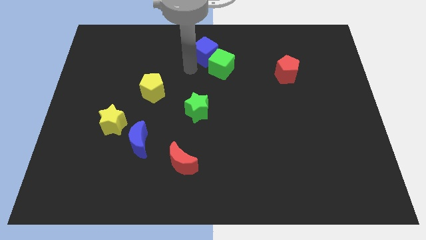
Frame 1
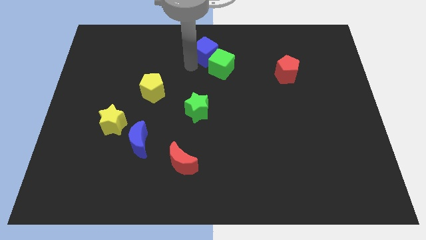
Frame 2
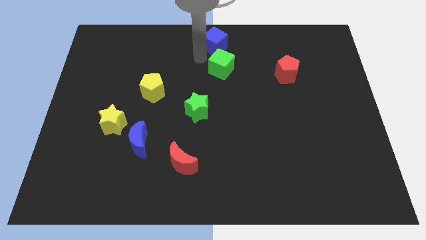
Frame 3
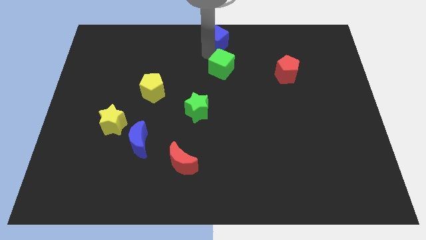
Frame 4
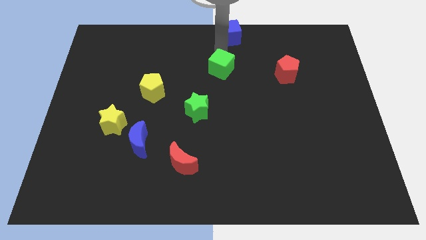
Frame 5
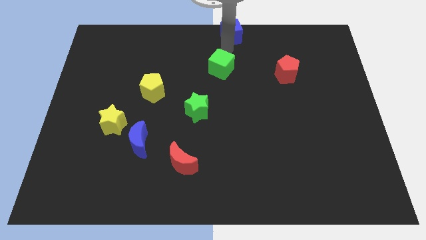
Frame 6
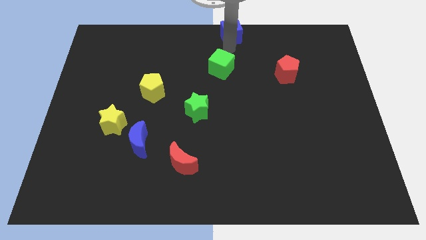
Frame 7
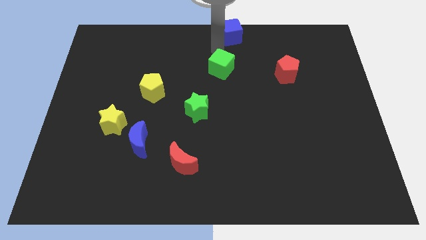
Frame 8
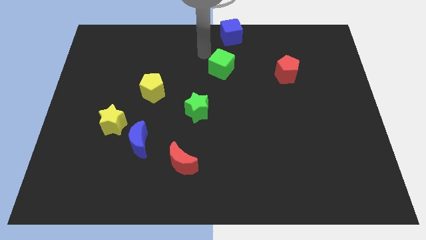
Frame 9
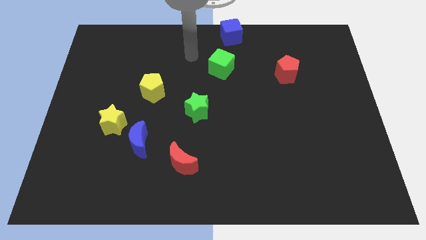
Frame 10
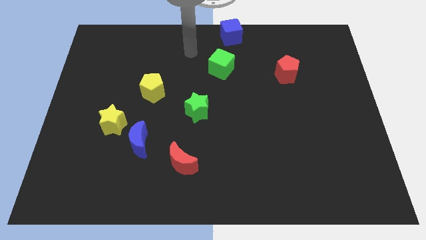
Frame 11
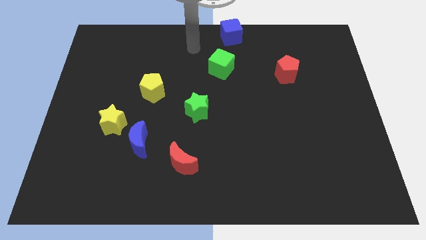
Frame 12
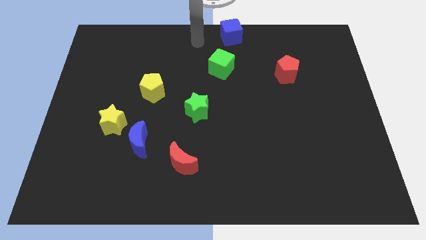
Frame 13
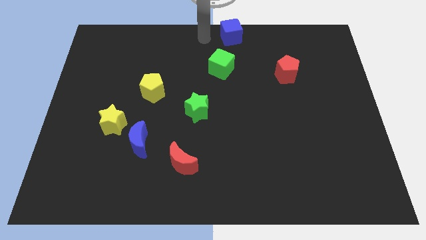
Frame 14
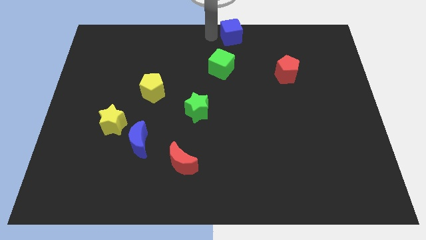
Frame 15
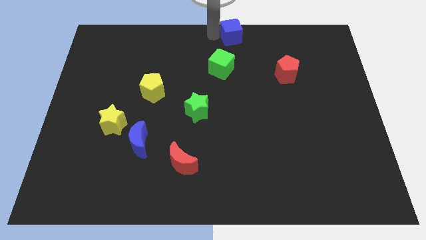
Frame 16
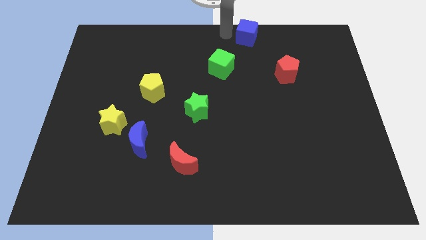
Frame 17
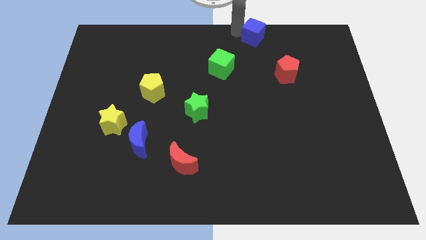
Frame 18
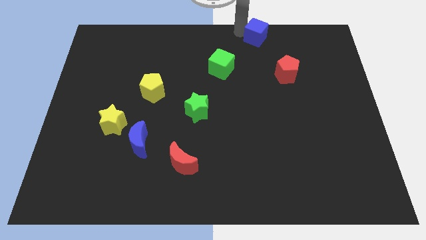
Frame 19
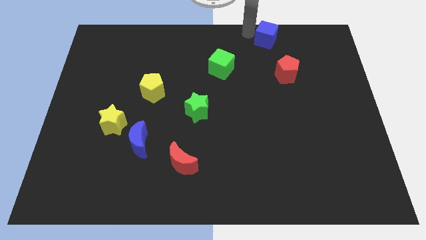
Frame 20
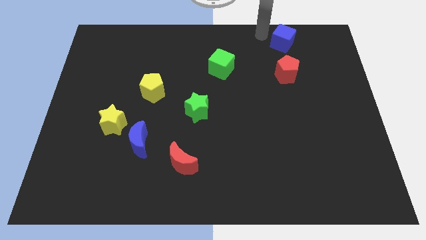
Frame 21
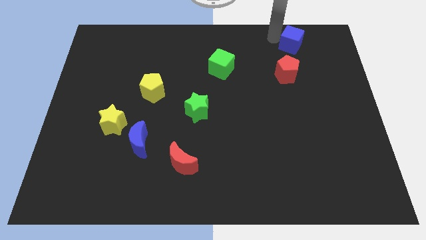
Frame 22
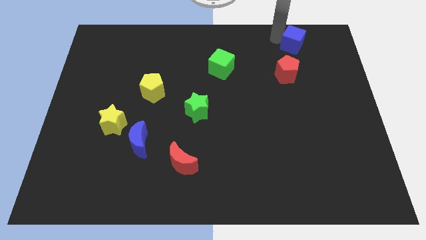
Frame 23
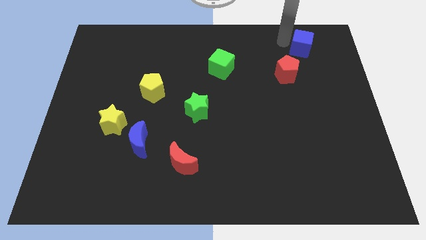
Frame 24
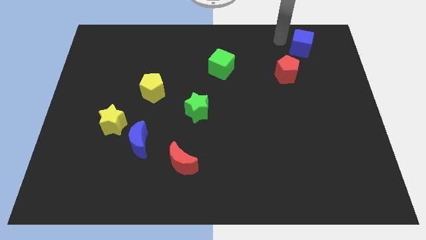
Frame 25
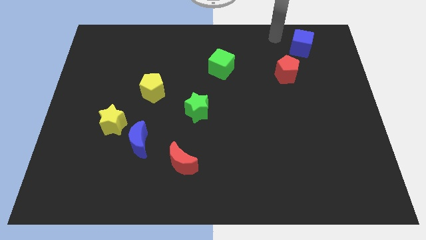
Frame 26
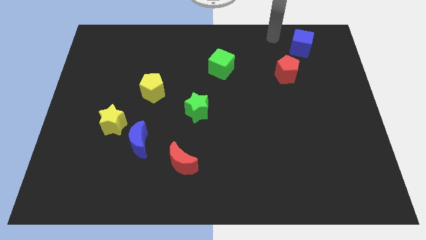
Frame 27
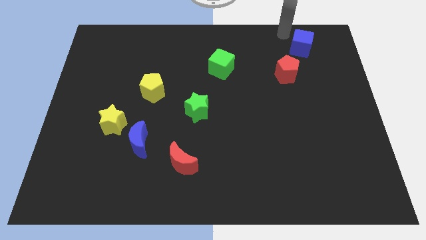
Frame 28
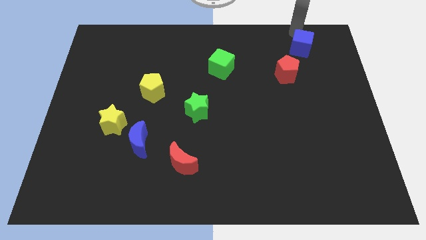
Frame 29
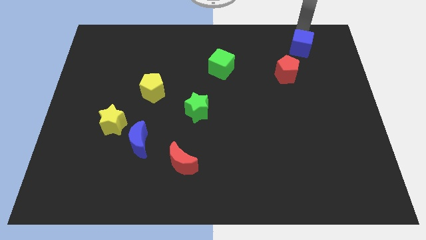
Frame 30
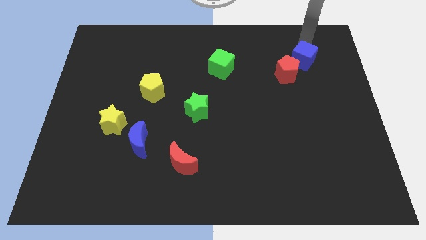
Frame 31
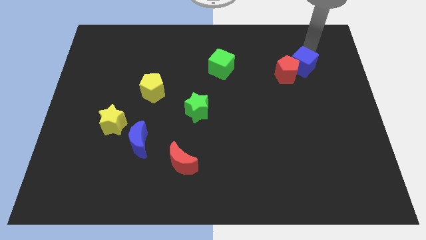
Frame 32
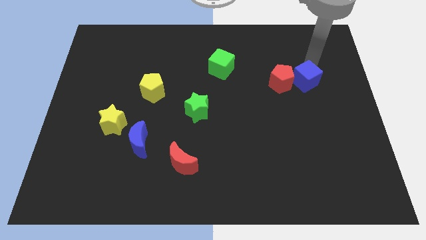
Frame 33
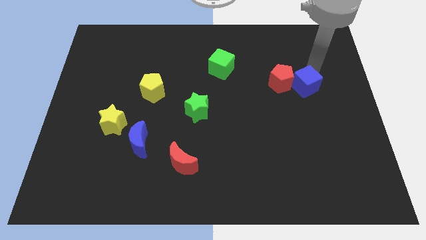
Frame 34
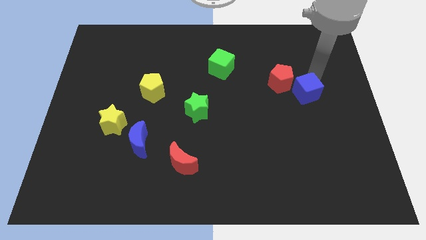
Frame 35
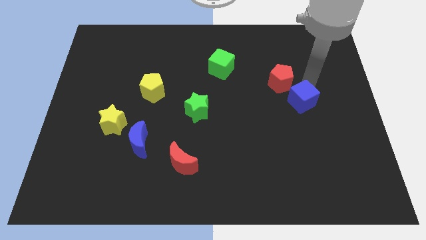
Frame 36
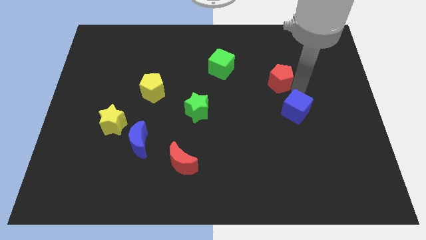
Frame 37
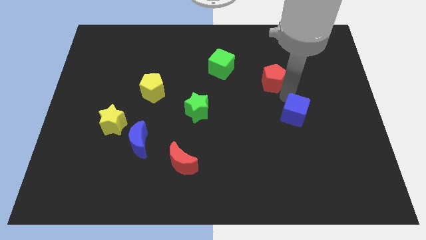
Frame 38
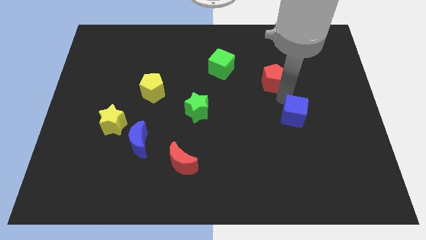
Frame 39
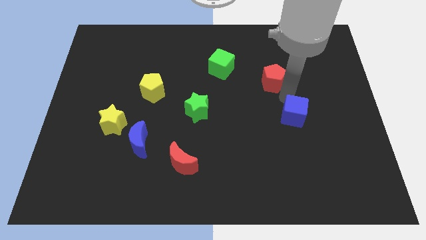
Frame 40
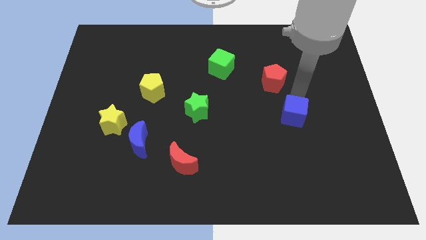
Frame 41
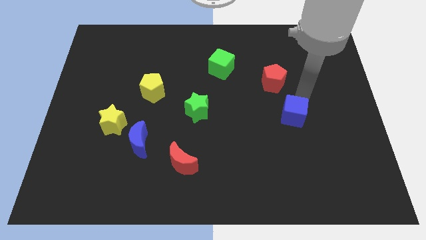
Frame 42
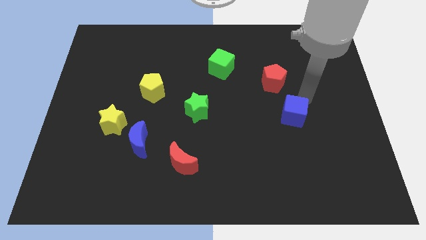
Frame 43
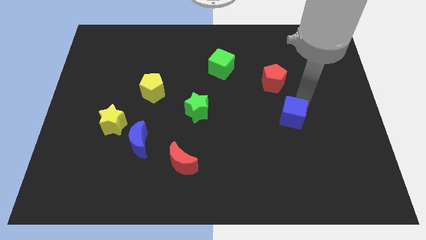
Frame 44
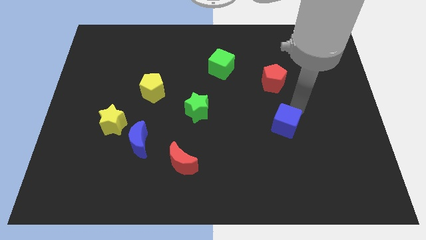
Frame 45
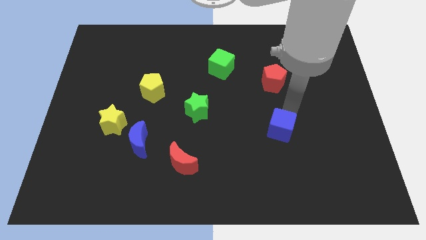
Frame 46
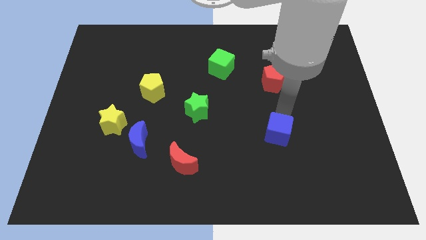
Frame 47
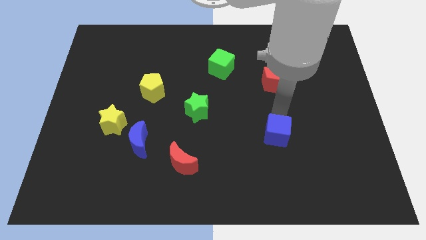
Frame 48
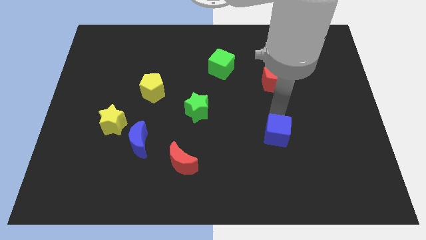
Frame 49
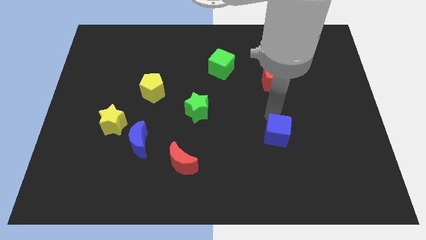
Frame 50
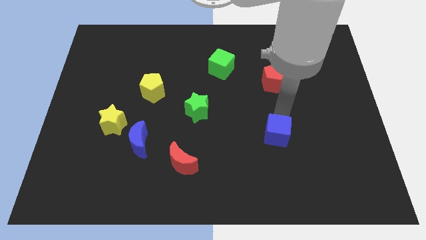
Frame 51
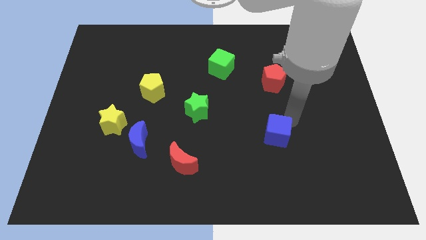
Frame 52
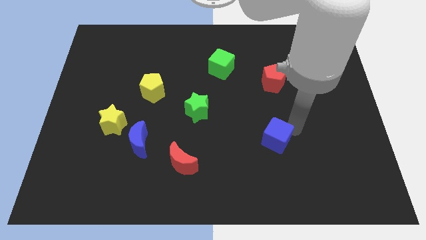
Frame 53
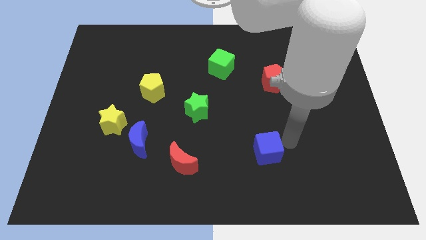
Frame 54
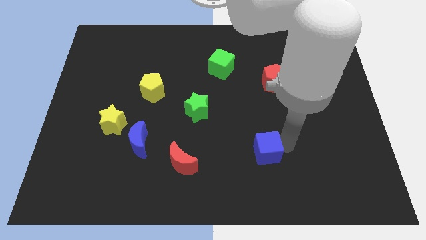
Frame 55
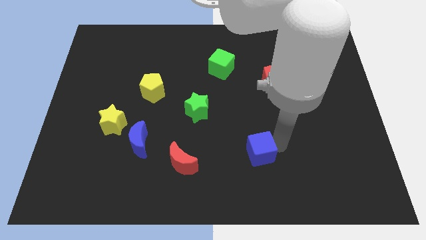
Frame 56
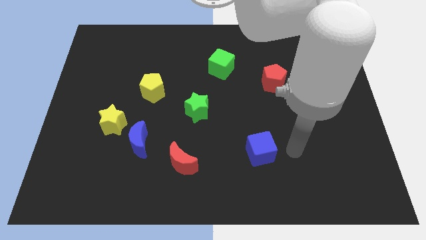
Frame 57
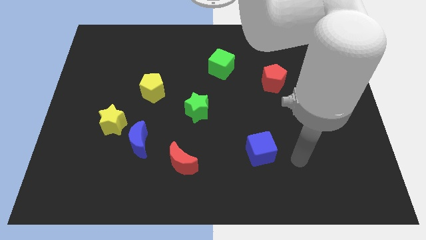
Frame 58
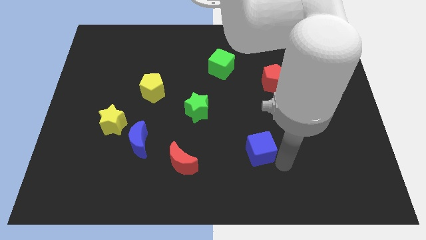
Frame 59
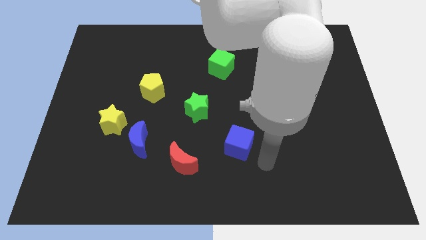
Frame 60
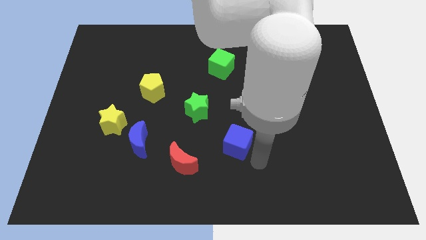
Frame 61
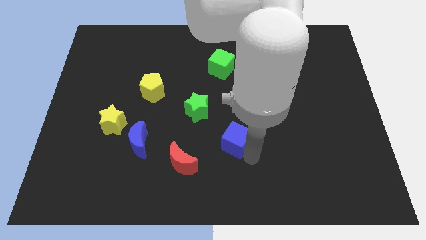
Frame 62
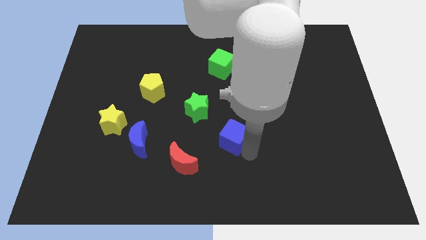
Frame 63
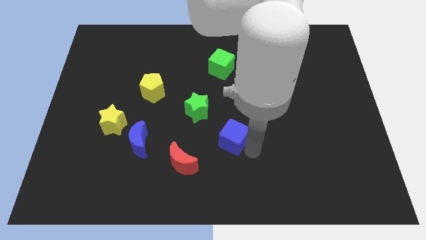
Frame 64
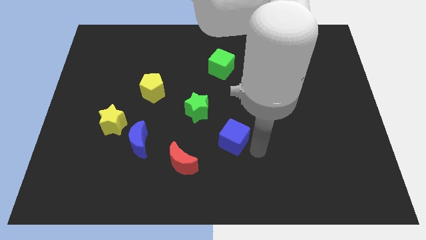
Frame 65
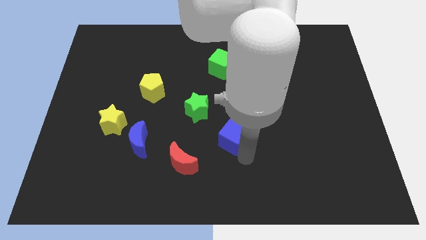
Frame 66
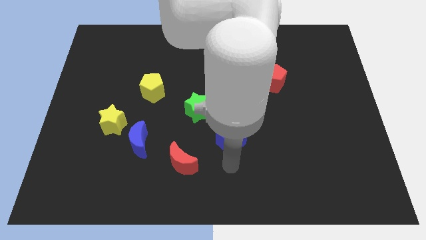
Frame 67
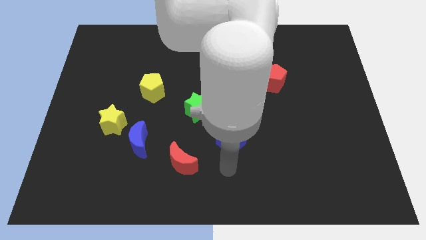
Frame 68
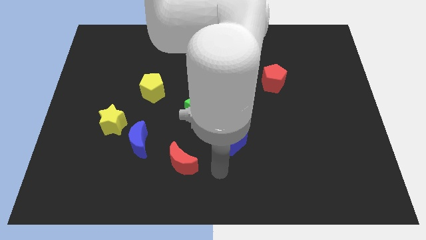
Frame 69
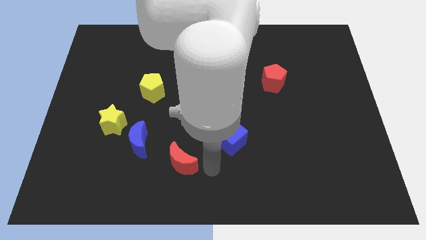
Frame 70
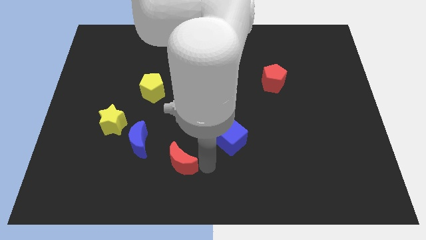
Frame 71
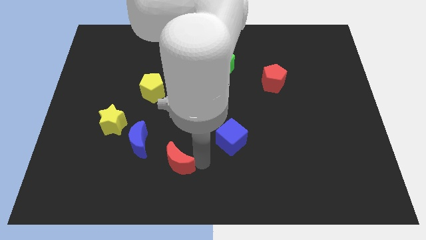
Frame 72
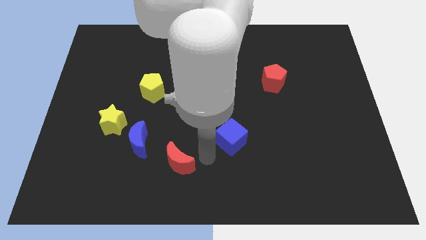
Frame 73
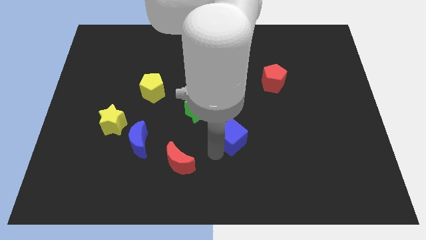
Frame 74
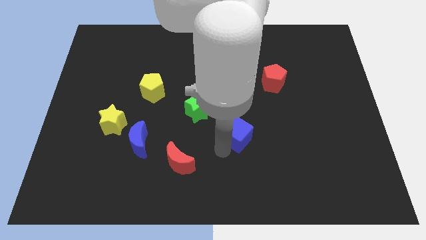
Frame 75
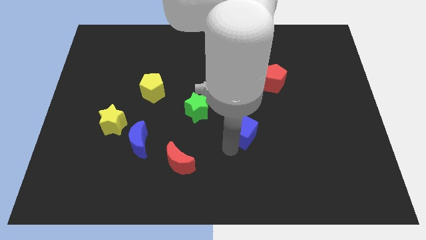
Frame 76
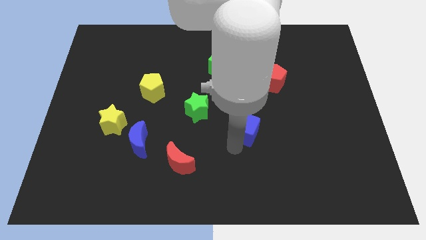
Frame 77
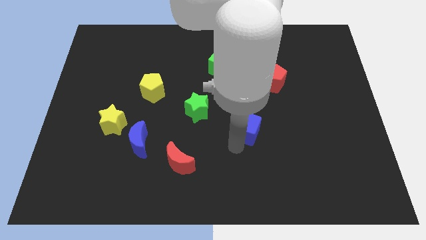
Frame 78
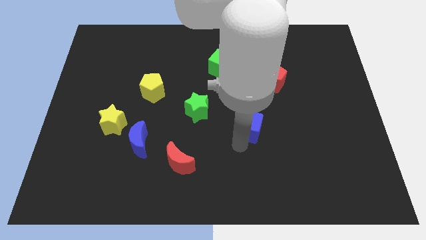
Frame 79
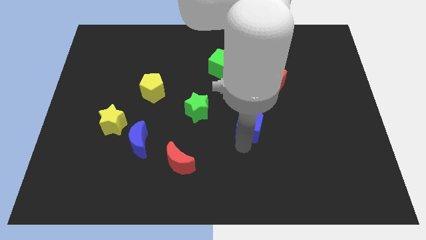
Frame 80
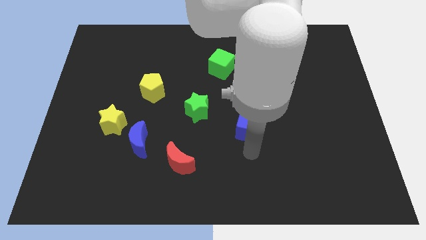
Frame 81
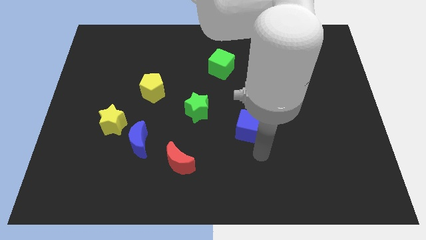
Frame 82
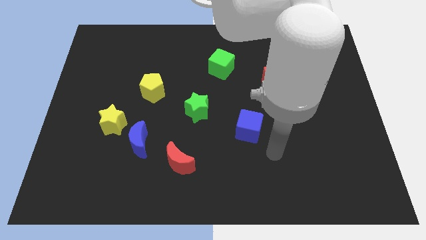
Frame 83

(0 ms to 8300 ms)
place the blue cube in between red pentagon and red moon in diagonal position

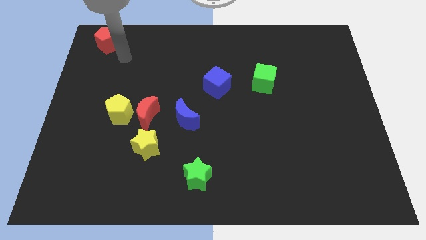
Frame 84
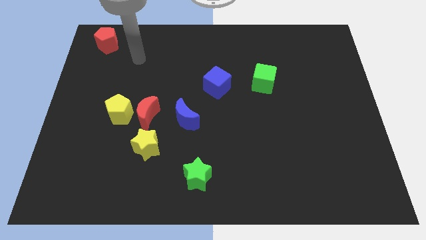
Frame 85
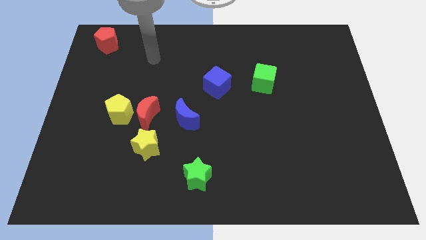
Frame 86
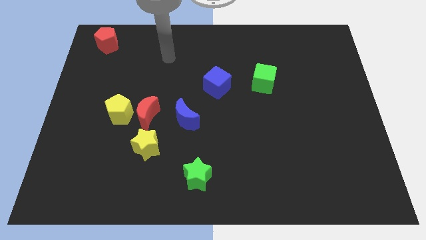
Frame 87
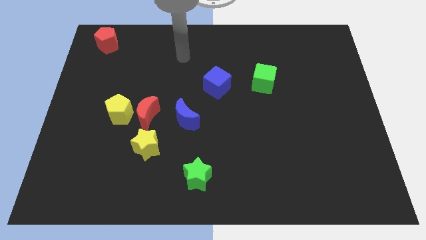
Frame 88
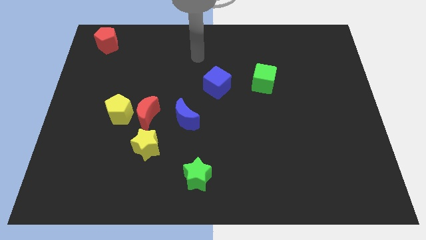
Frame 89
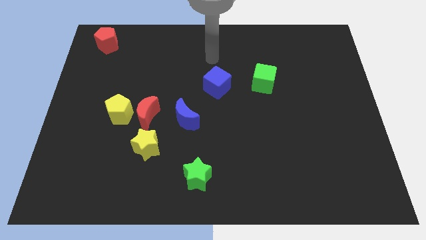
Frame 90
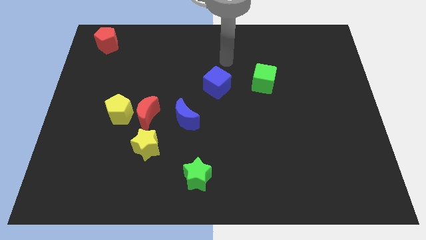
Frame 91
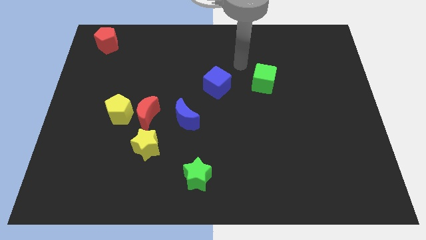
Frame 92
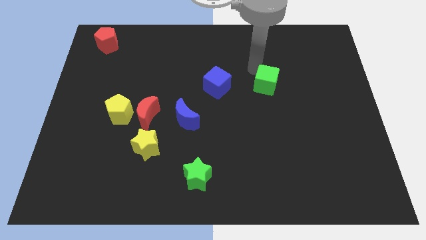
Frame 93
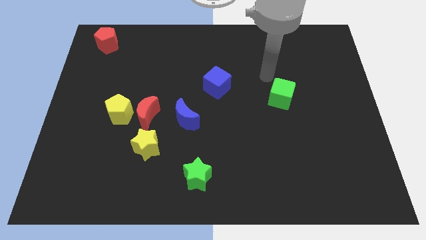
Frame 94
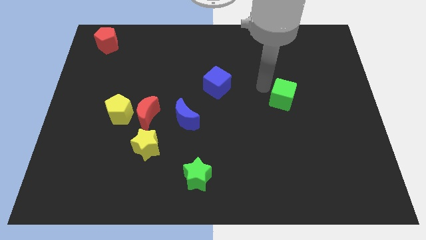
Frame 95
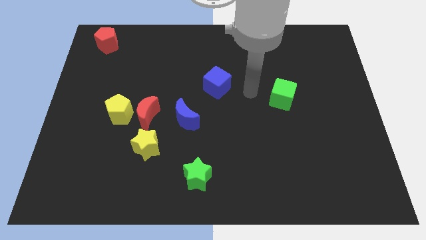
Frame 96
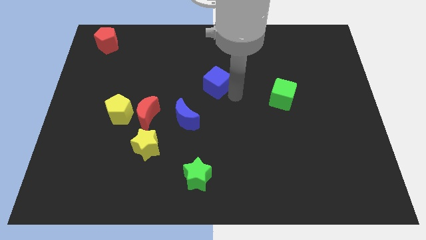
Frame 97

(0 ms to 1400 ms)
move the green cube slightly towards the right
